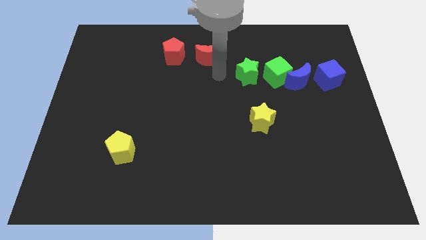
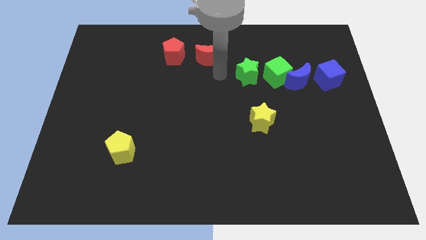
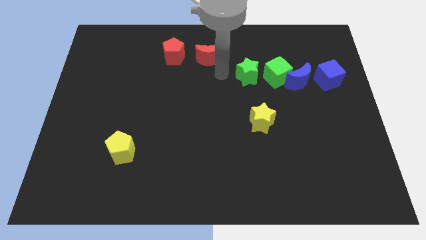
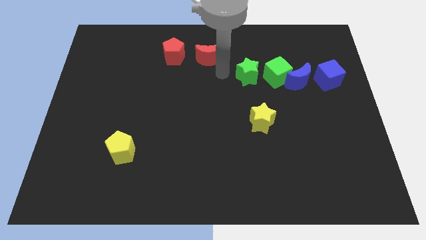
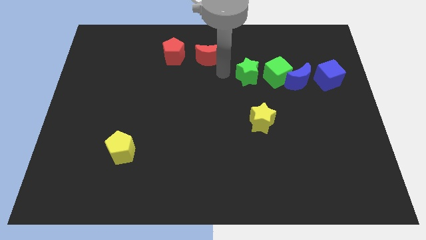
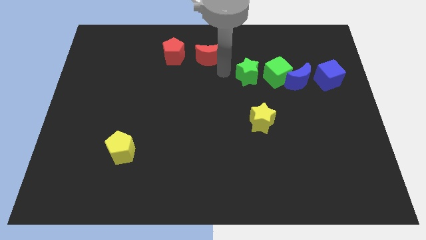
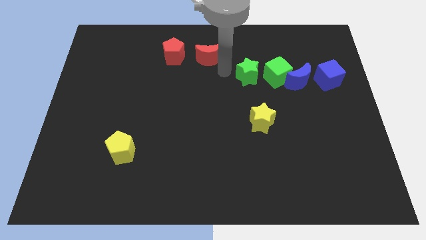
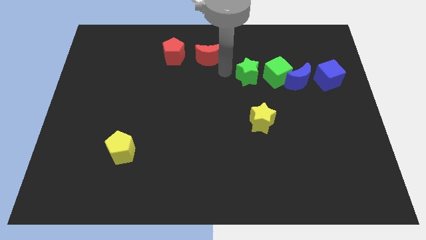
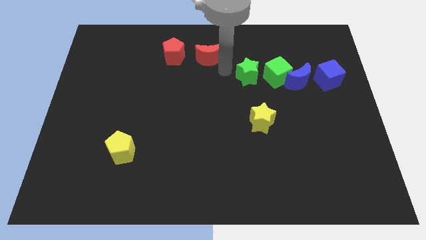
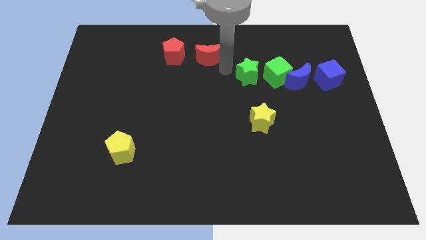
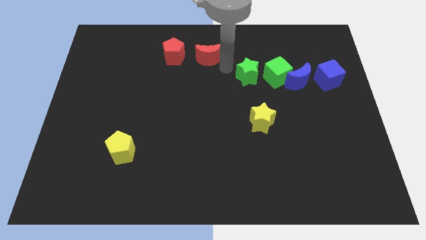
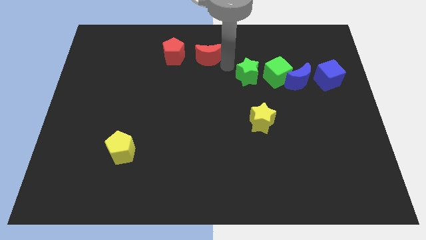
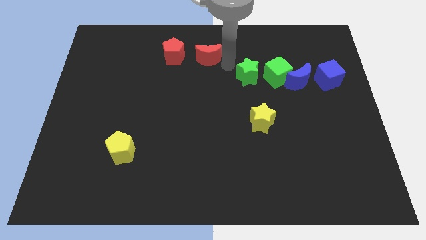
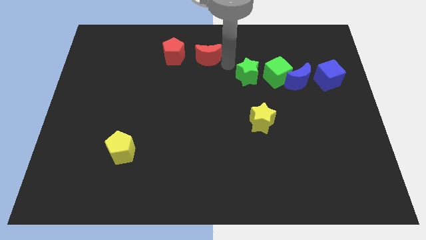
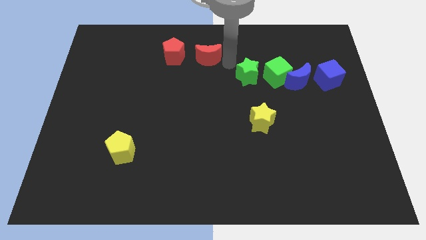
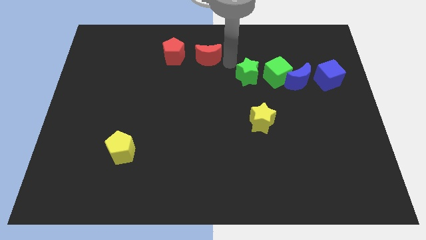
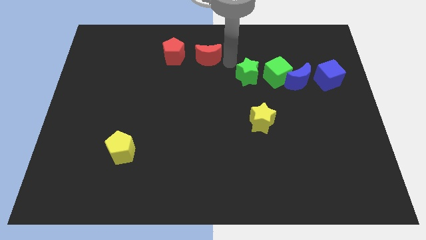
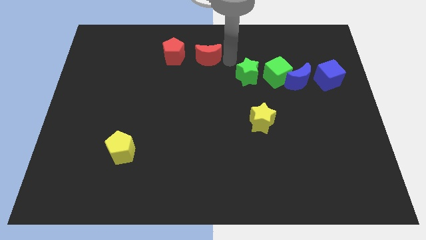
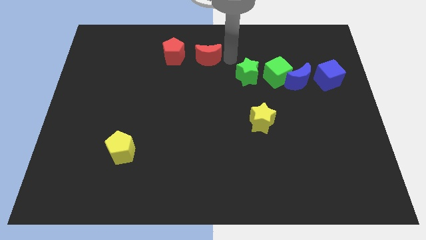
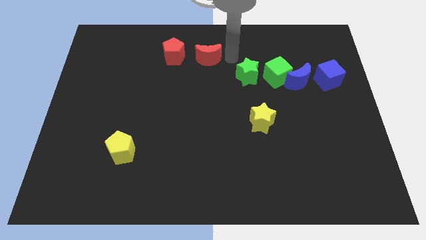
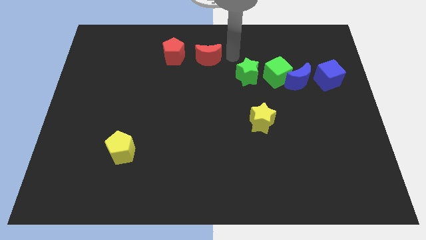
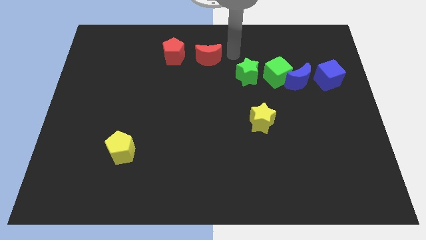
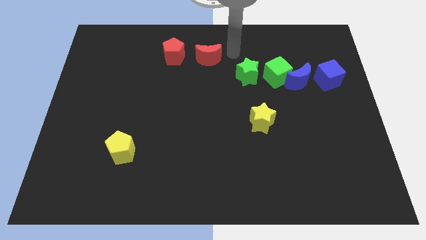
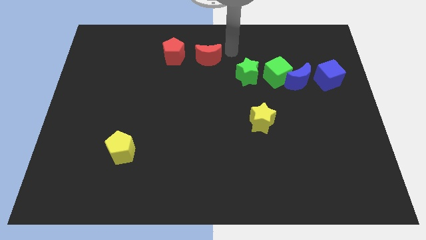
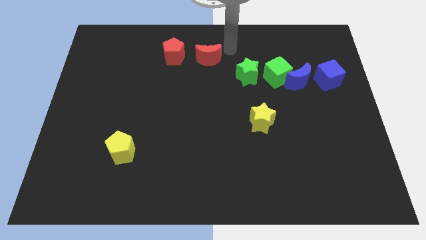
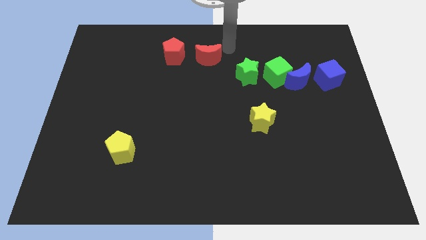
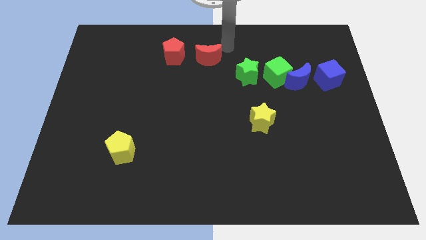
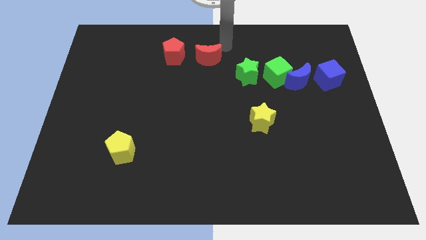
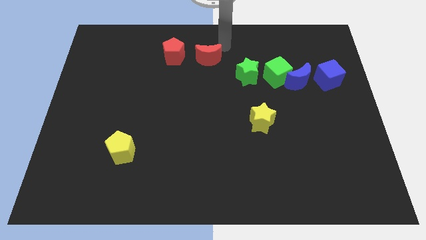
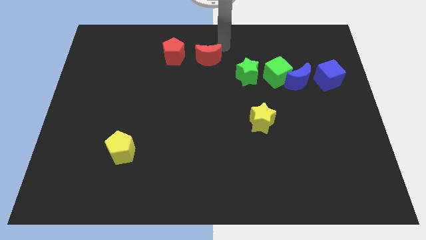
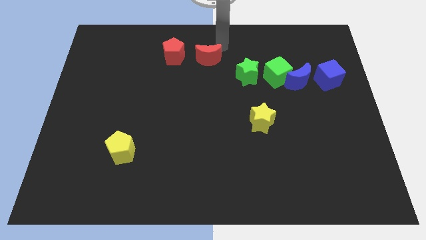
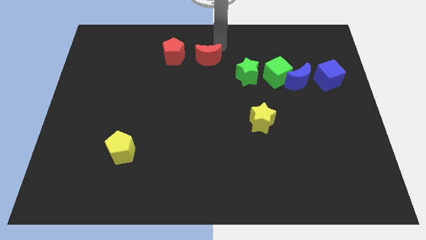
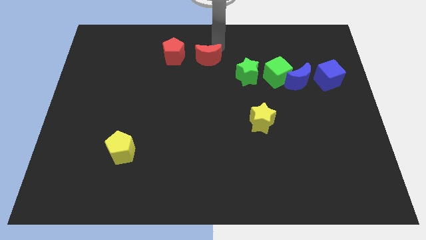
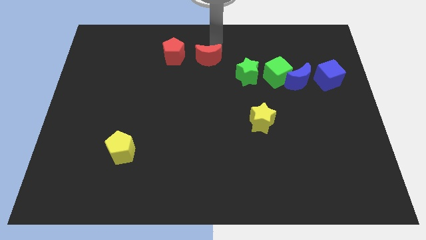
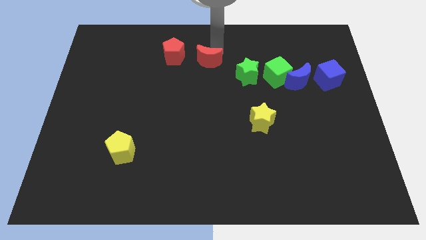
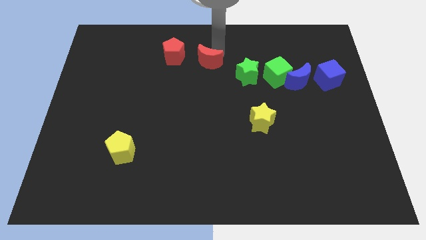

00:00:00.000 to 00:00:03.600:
touch the red crescent at the top of it

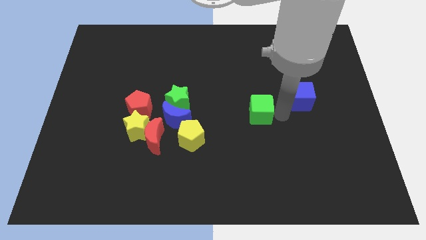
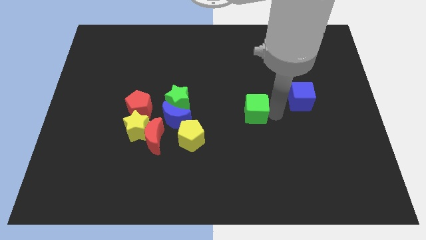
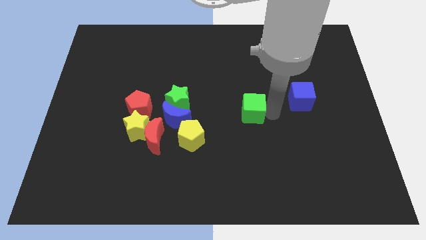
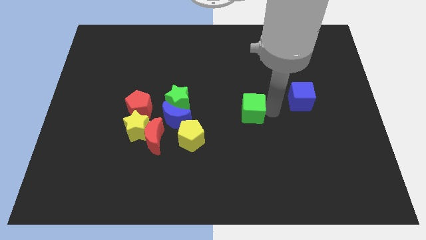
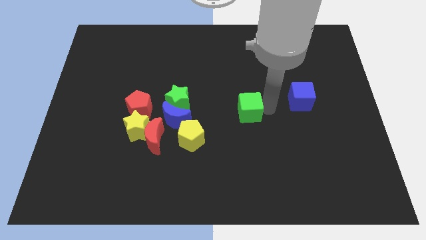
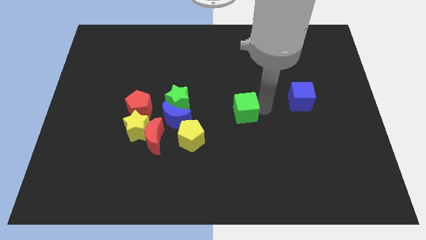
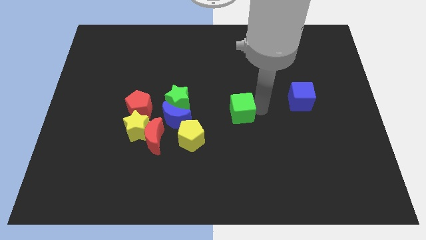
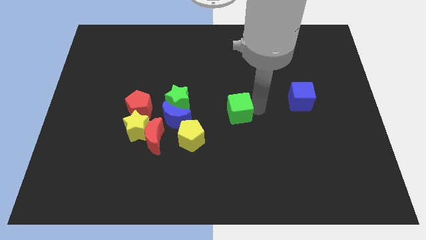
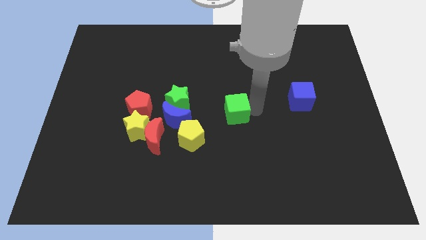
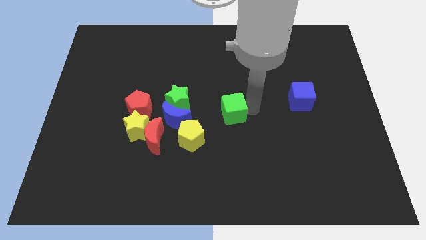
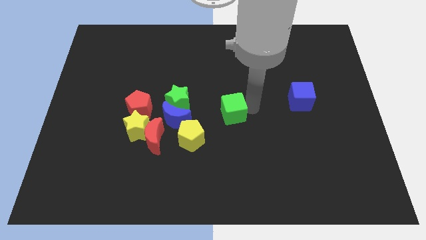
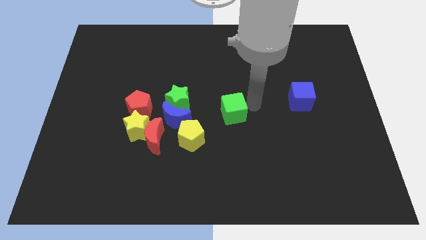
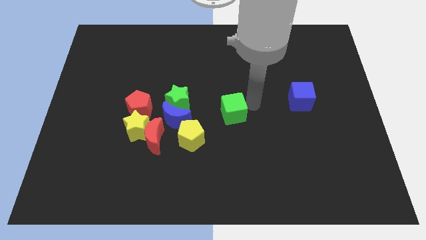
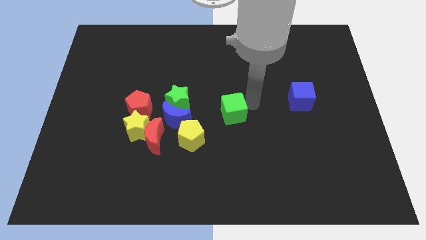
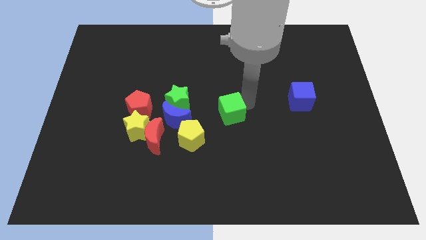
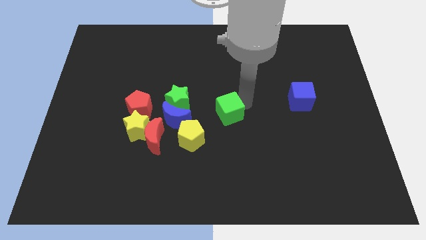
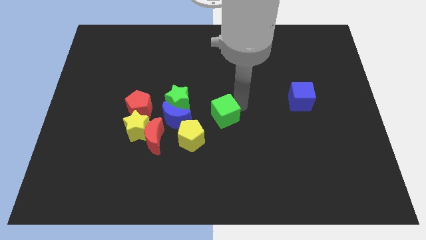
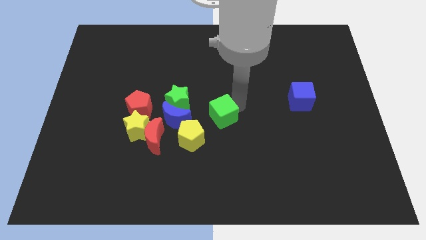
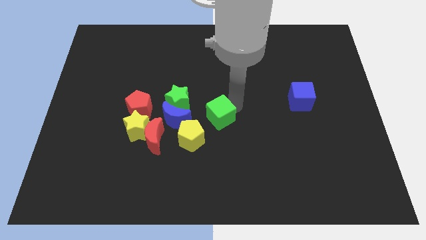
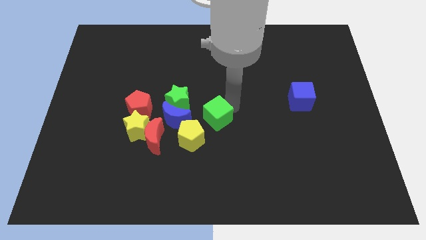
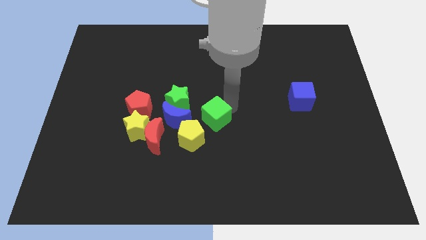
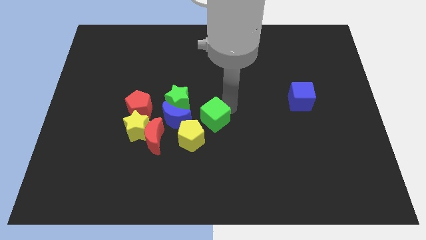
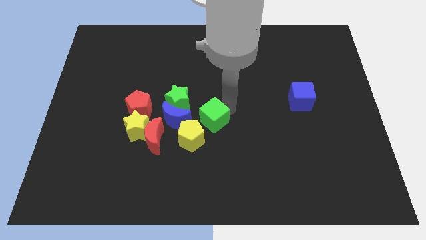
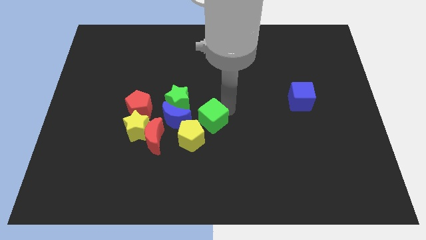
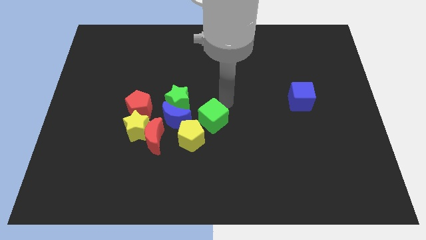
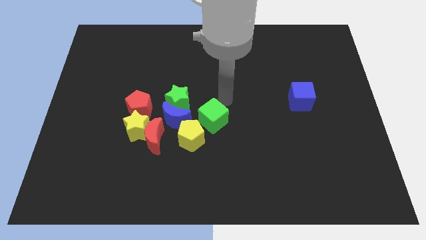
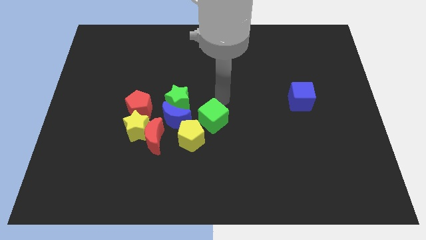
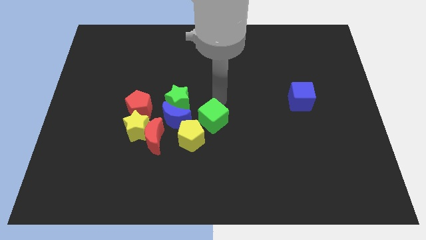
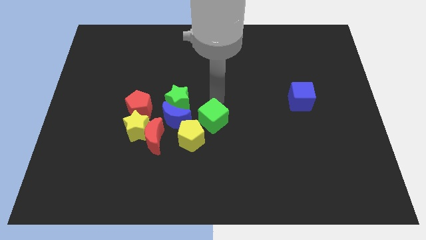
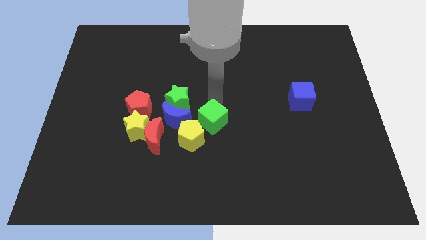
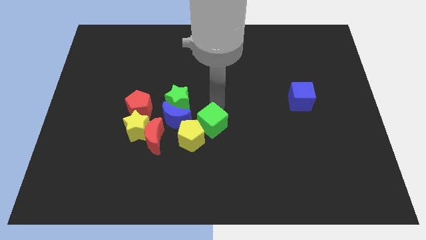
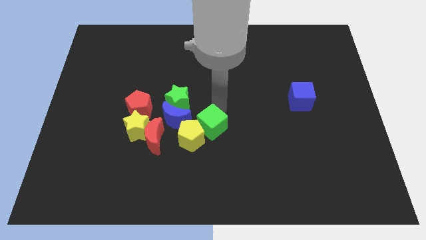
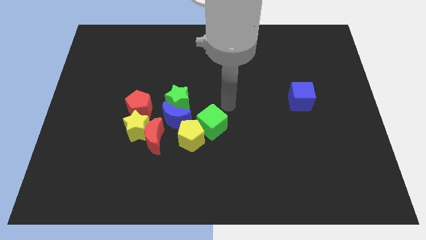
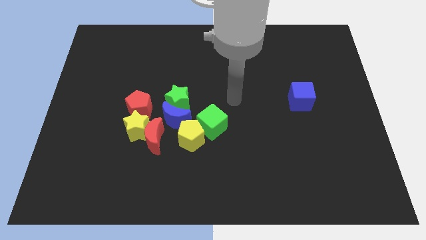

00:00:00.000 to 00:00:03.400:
move the green cube to the right of the blue crescent

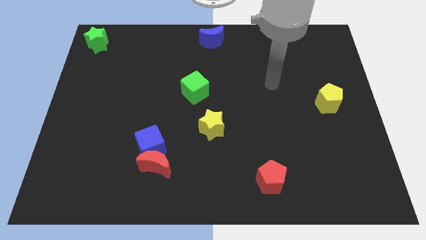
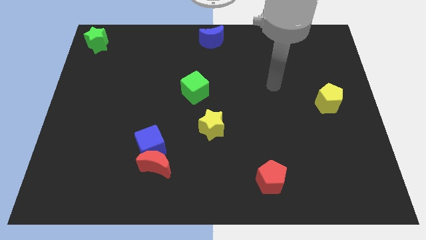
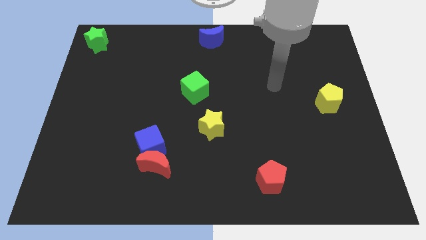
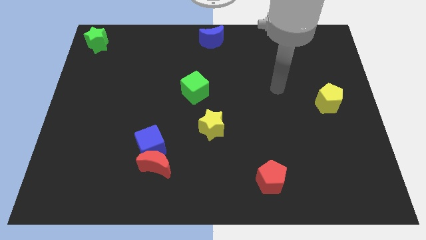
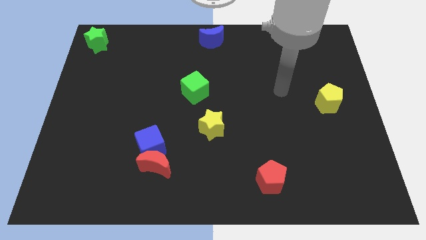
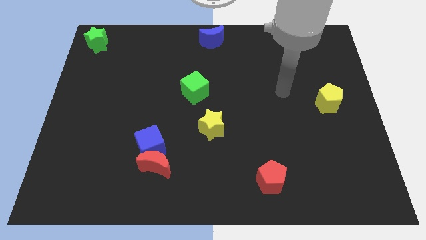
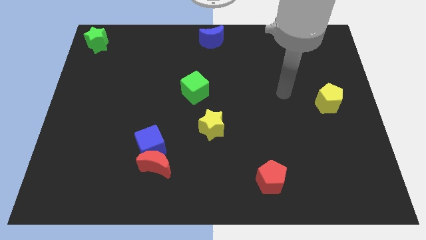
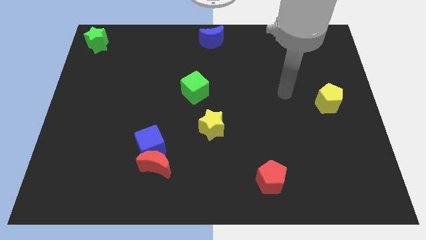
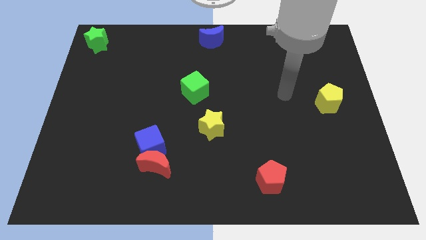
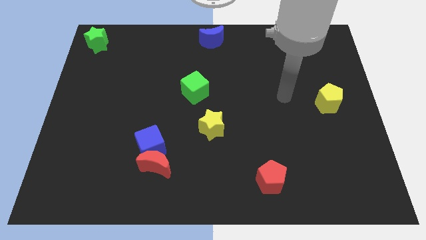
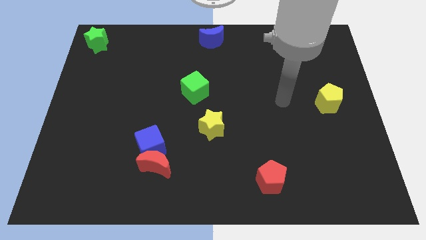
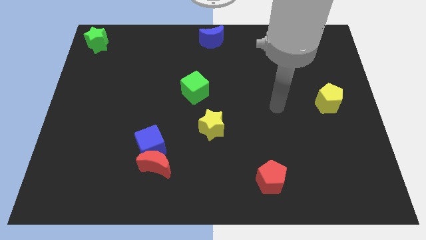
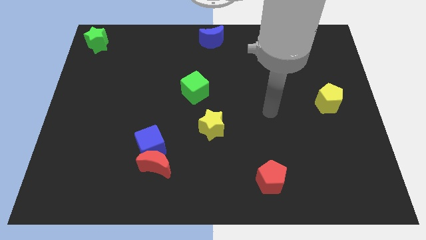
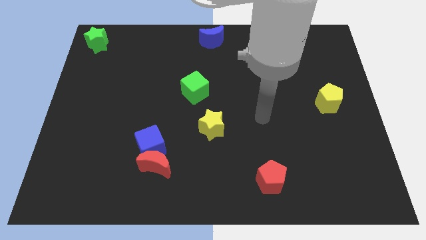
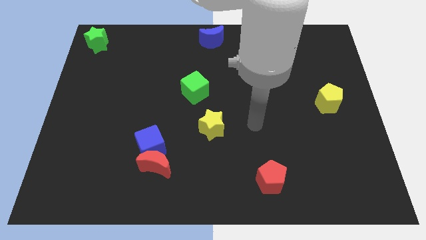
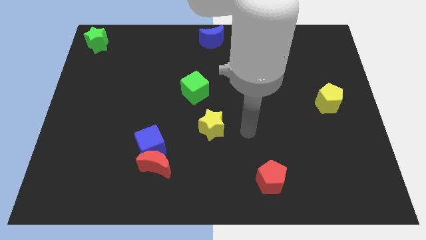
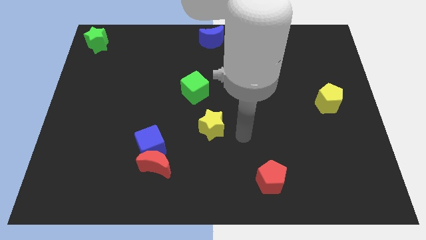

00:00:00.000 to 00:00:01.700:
place the arm to the right of the yellow star

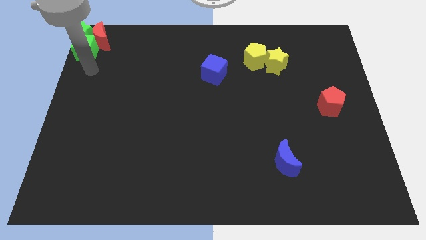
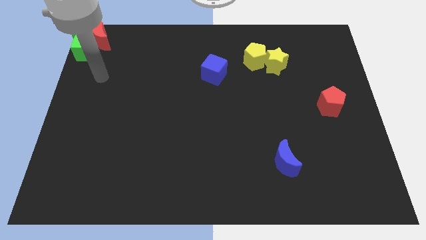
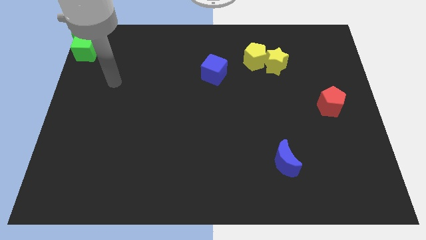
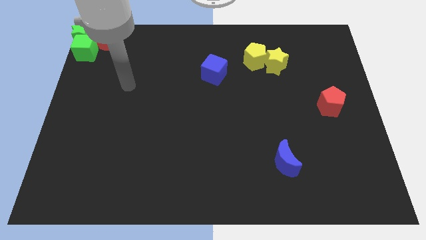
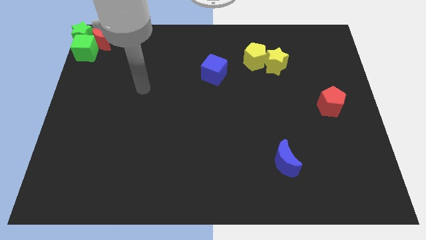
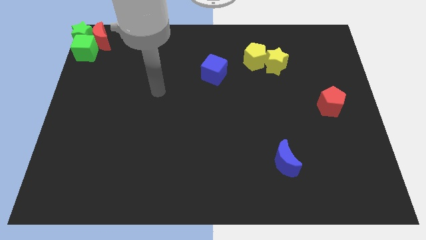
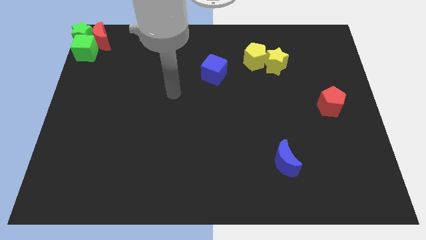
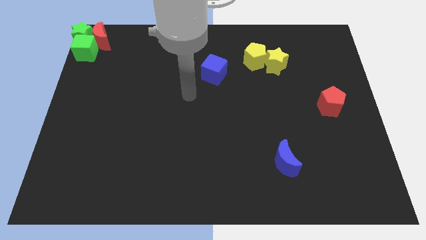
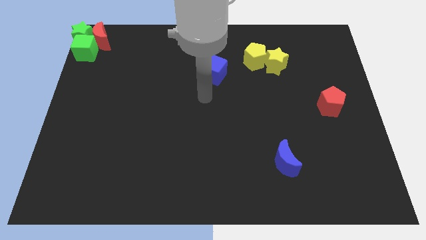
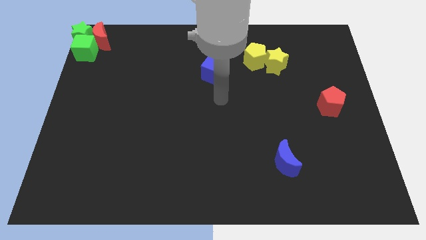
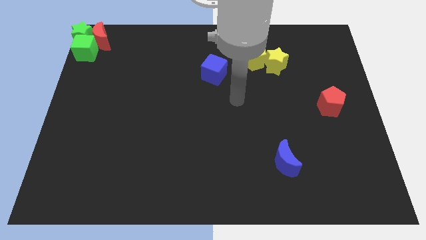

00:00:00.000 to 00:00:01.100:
push your arm vertically at the bottom of the blue cube
